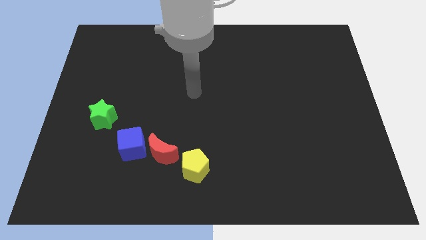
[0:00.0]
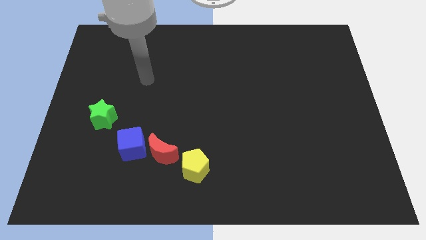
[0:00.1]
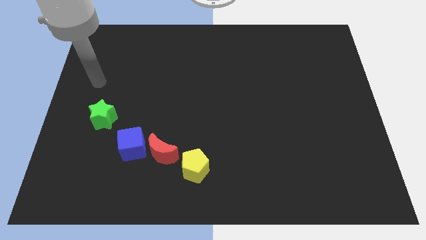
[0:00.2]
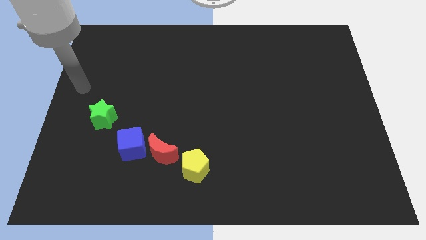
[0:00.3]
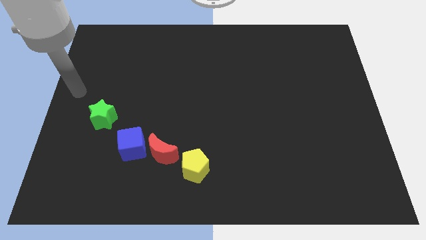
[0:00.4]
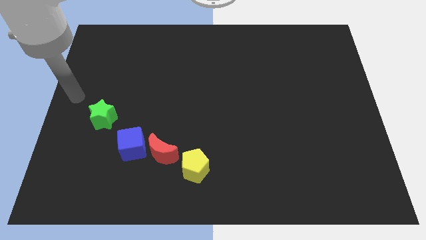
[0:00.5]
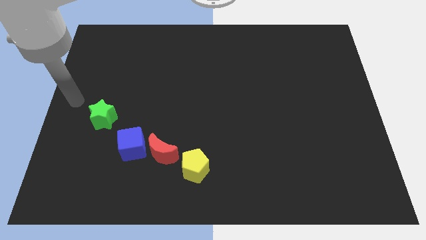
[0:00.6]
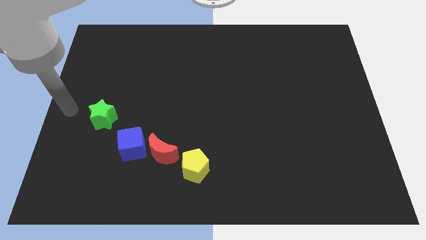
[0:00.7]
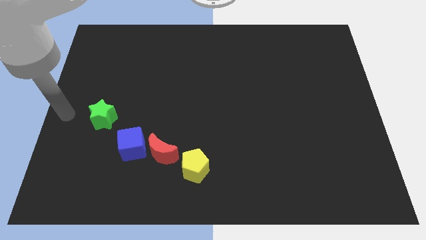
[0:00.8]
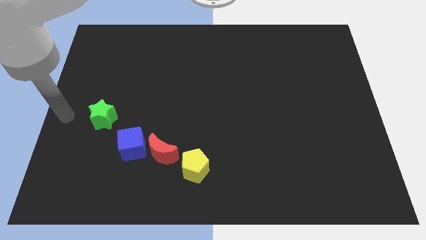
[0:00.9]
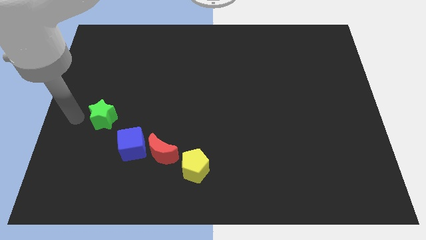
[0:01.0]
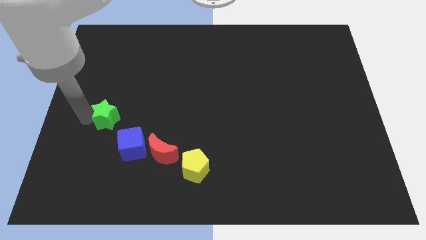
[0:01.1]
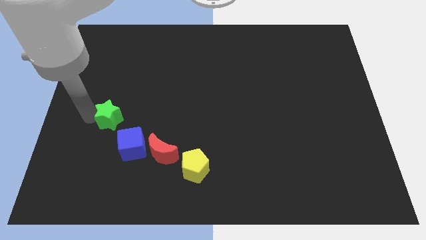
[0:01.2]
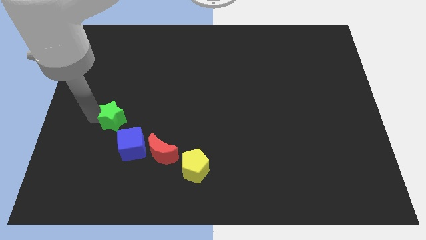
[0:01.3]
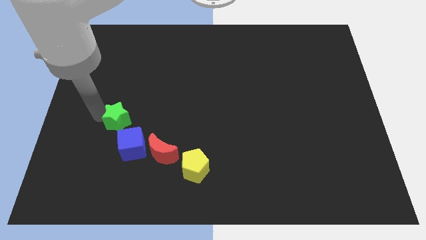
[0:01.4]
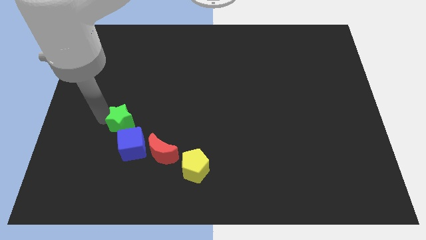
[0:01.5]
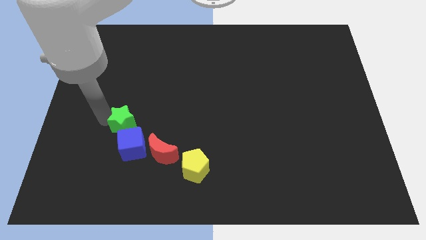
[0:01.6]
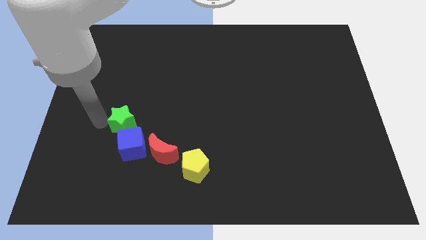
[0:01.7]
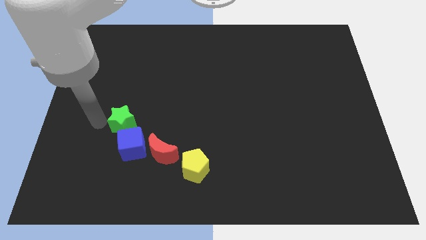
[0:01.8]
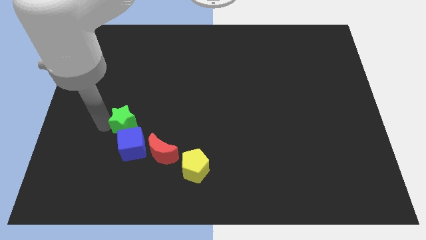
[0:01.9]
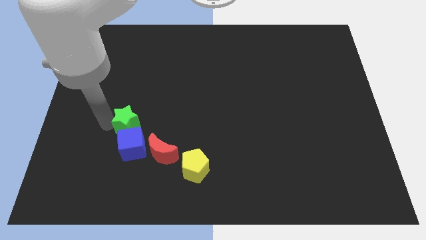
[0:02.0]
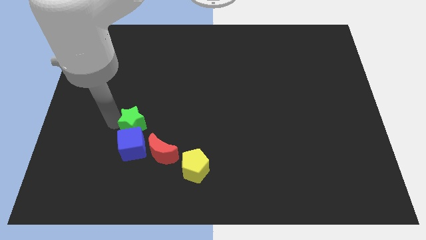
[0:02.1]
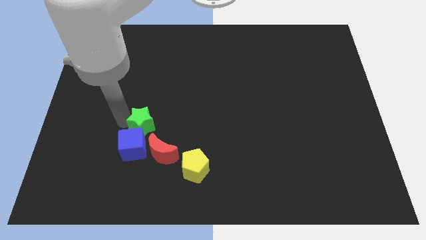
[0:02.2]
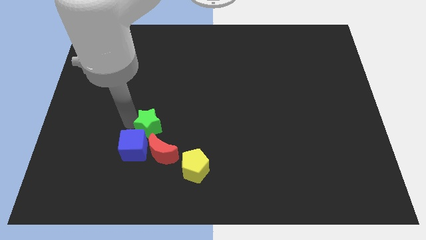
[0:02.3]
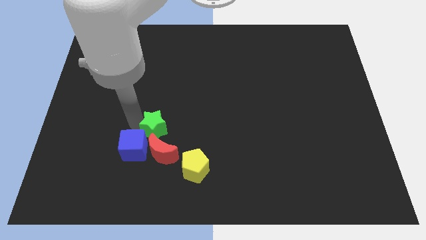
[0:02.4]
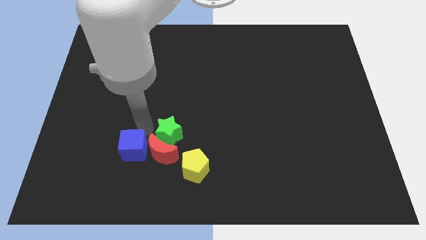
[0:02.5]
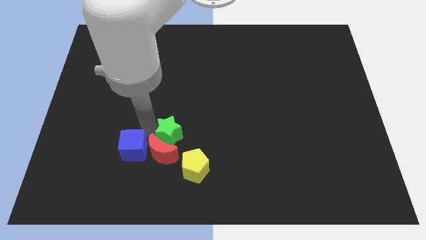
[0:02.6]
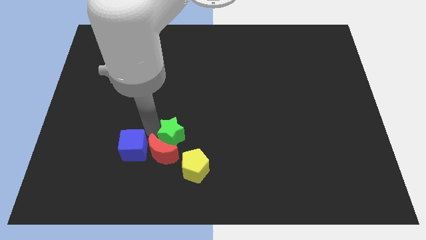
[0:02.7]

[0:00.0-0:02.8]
push the green star towards the red block

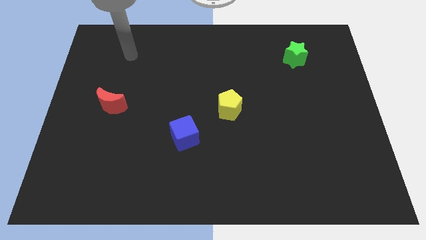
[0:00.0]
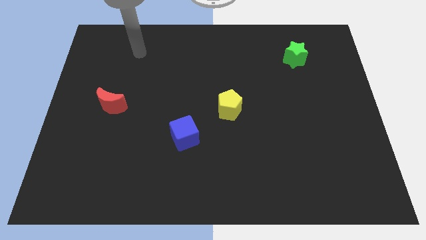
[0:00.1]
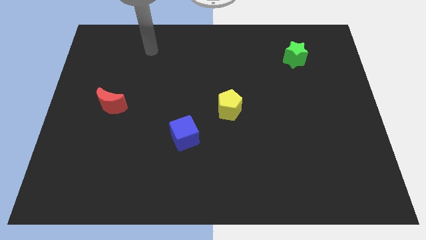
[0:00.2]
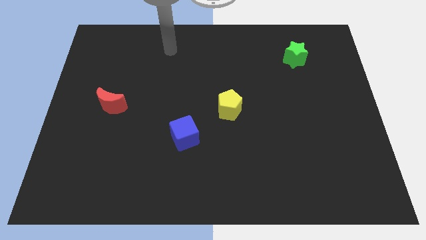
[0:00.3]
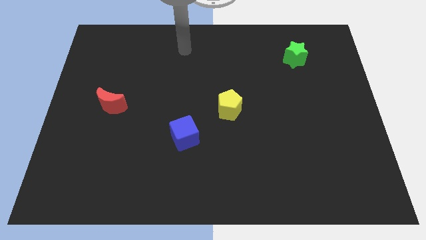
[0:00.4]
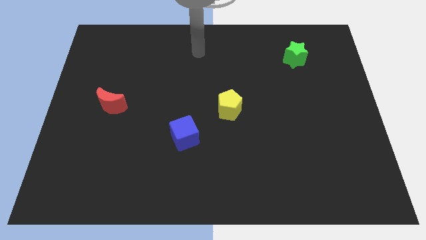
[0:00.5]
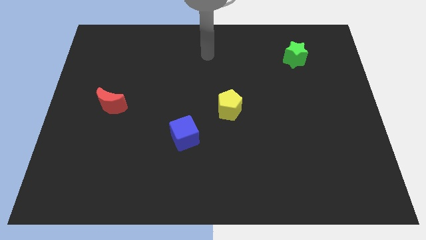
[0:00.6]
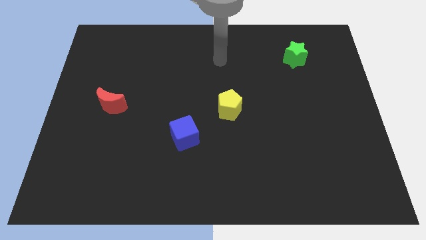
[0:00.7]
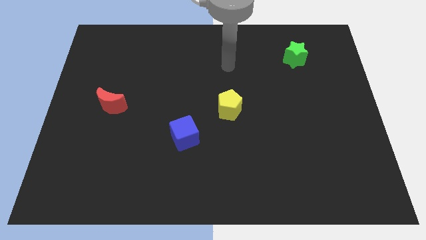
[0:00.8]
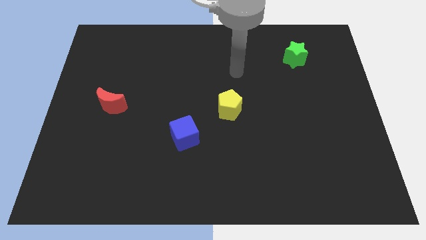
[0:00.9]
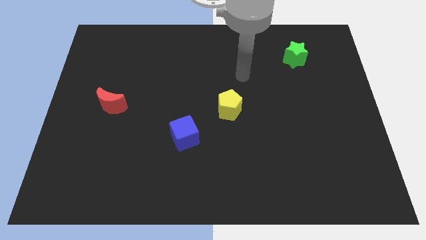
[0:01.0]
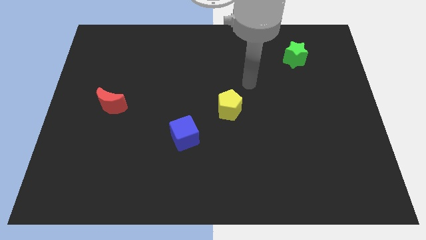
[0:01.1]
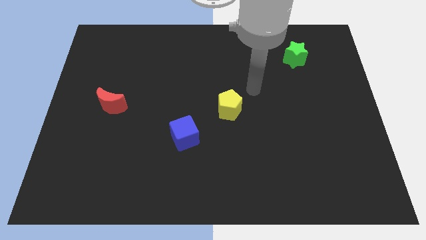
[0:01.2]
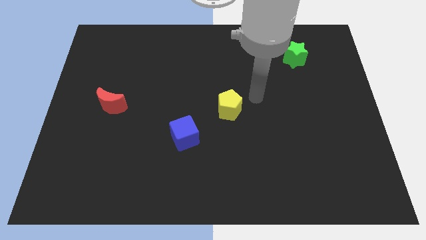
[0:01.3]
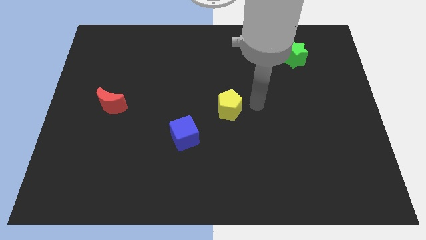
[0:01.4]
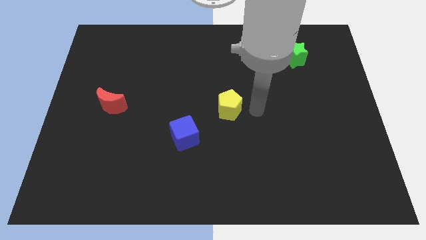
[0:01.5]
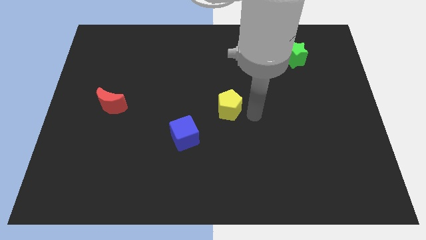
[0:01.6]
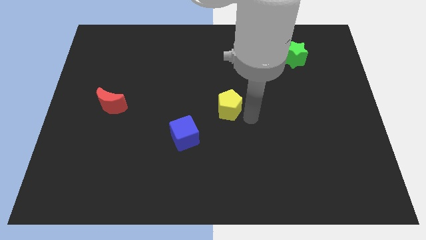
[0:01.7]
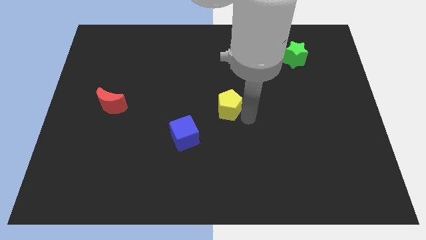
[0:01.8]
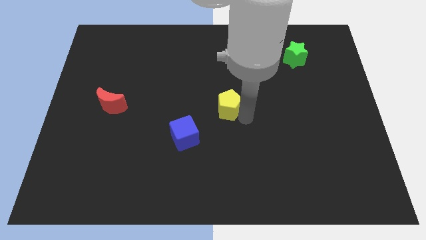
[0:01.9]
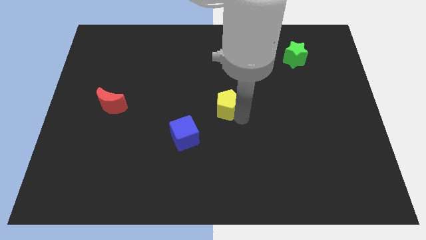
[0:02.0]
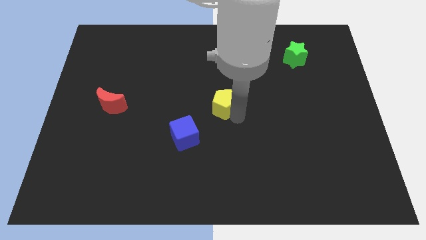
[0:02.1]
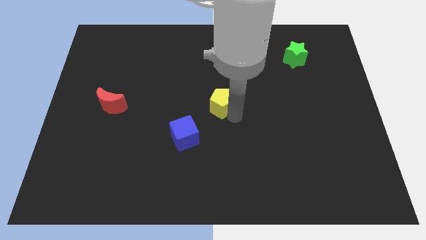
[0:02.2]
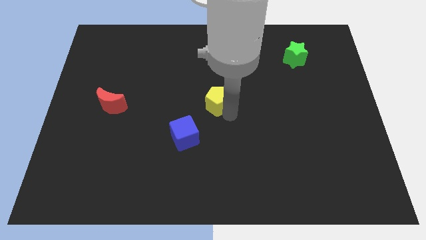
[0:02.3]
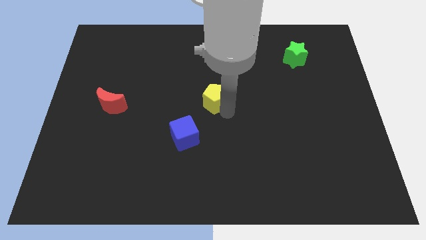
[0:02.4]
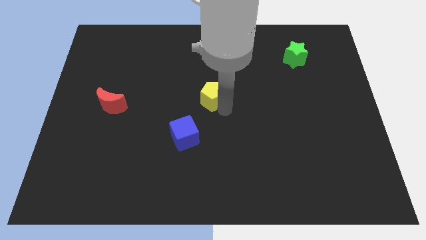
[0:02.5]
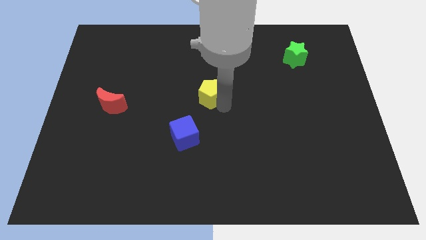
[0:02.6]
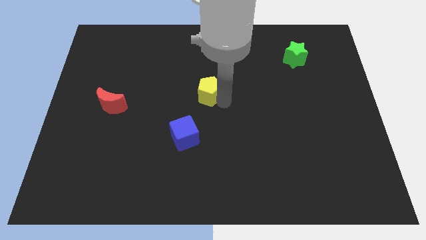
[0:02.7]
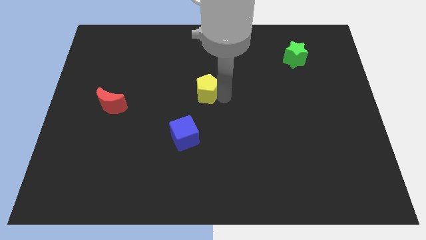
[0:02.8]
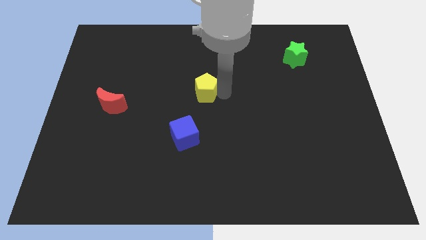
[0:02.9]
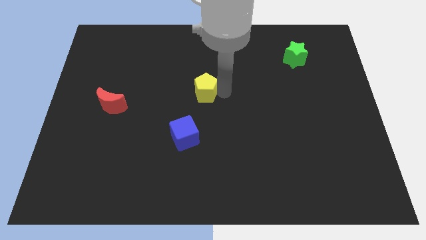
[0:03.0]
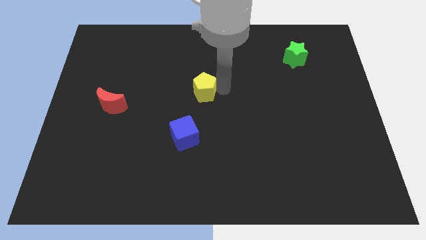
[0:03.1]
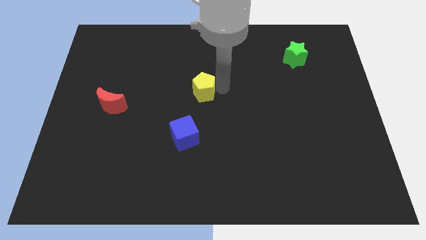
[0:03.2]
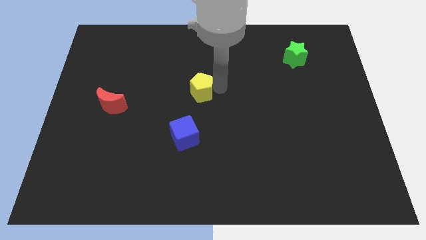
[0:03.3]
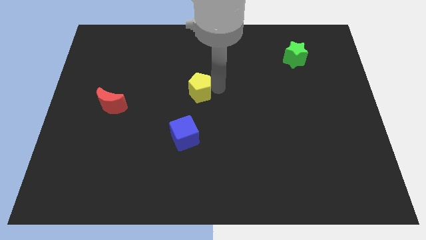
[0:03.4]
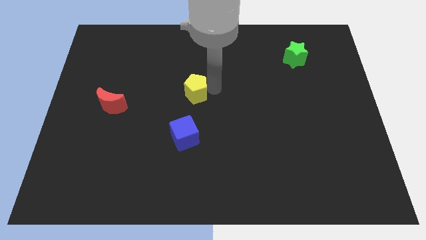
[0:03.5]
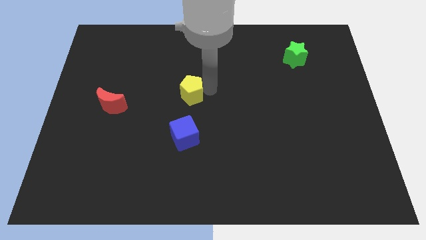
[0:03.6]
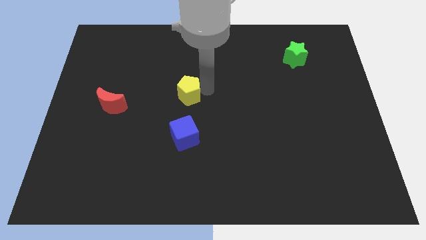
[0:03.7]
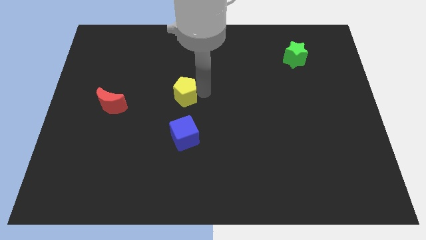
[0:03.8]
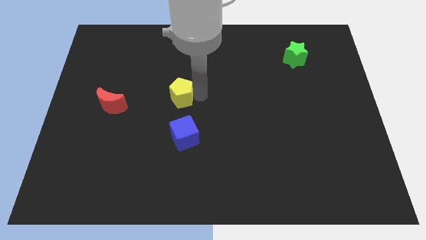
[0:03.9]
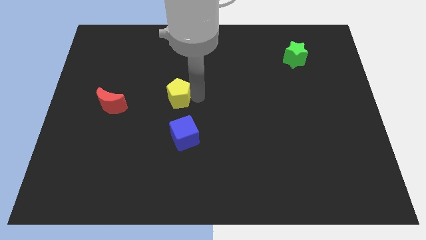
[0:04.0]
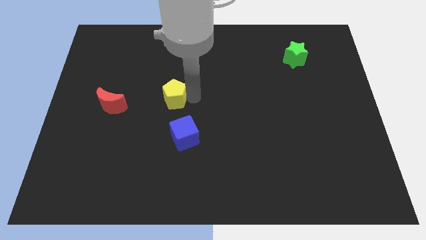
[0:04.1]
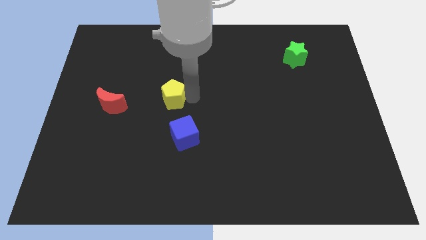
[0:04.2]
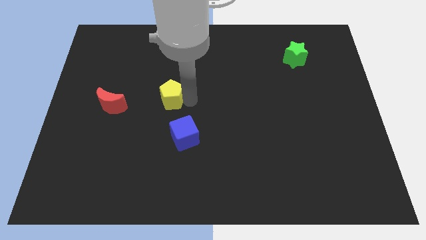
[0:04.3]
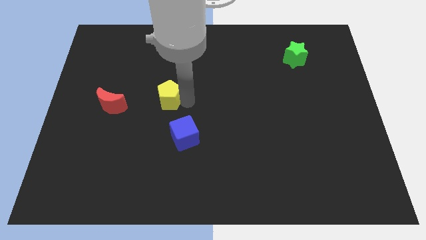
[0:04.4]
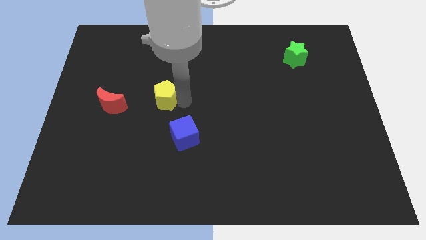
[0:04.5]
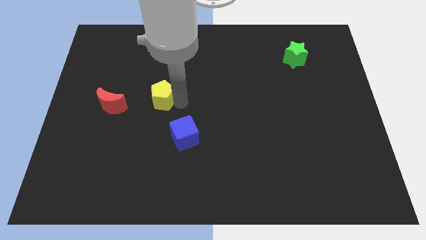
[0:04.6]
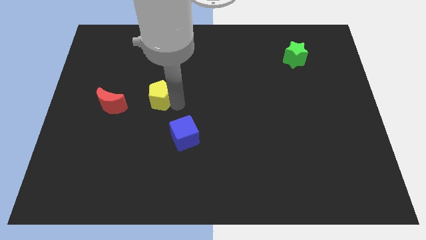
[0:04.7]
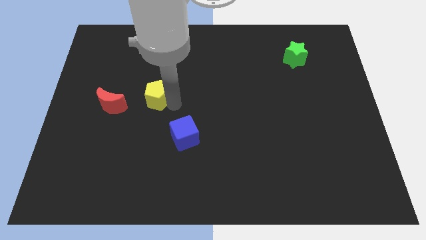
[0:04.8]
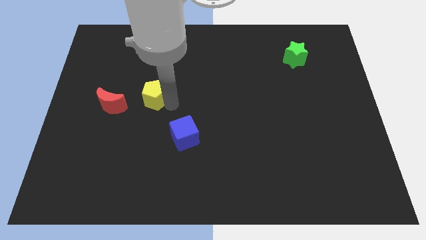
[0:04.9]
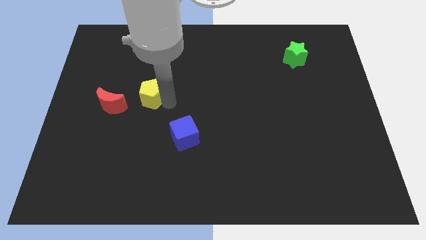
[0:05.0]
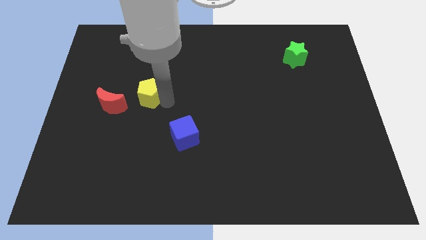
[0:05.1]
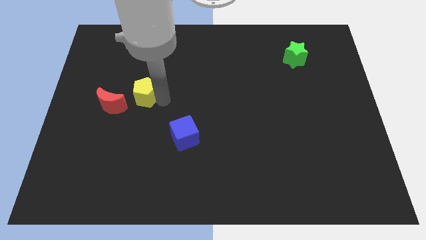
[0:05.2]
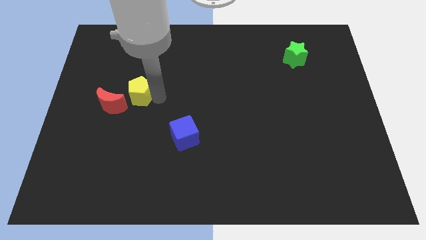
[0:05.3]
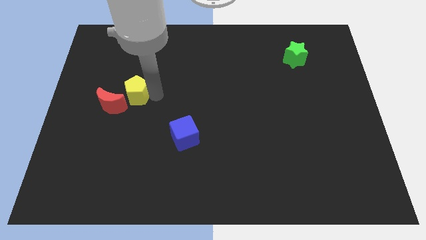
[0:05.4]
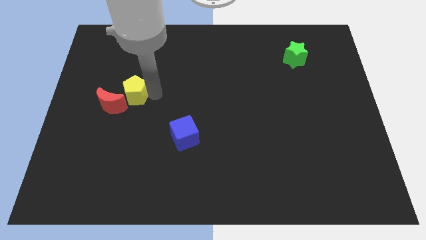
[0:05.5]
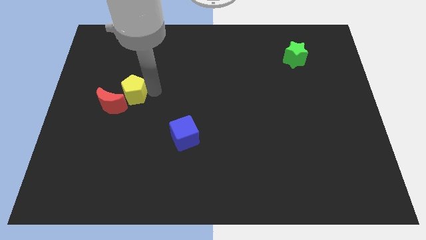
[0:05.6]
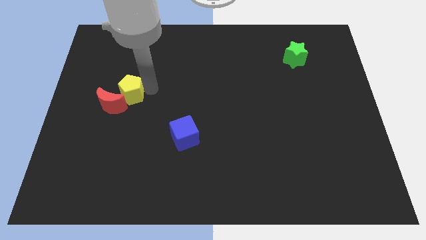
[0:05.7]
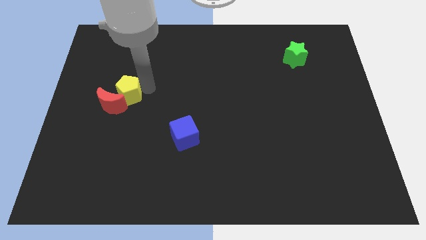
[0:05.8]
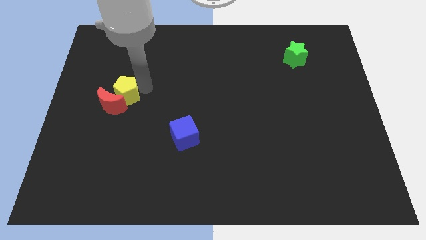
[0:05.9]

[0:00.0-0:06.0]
put the pentagon next to the red block
